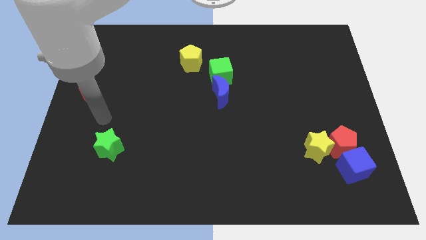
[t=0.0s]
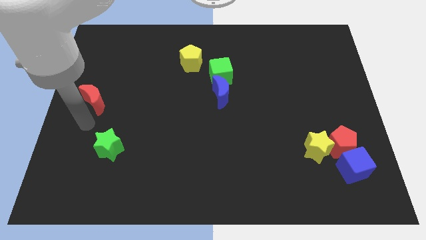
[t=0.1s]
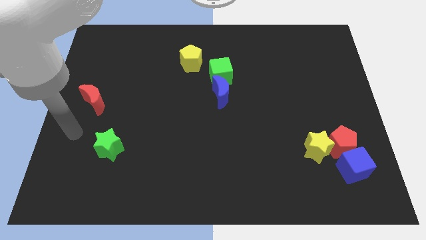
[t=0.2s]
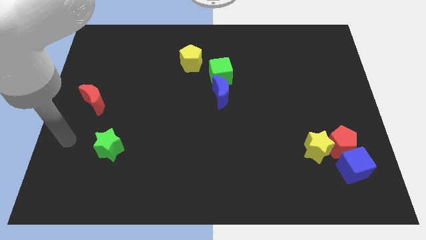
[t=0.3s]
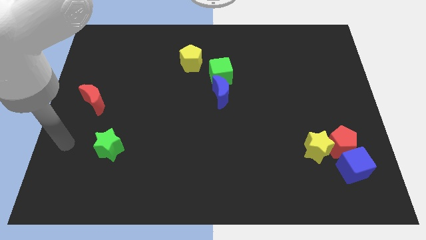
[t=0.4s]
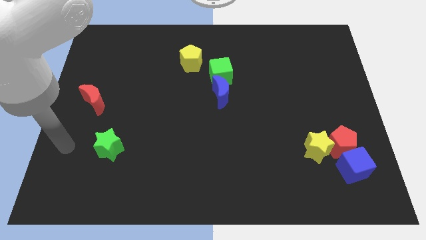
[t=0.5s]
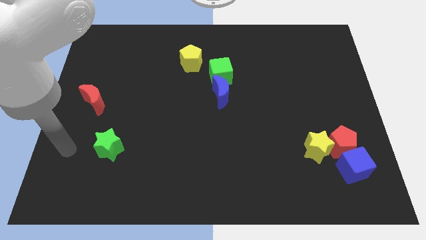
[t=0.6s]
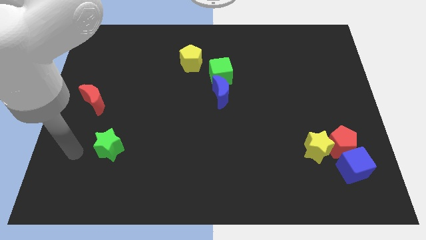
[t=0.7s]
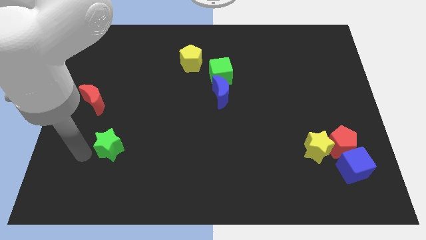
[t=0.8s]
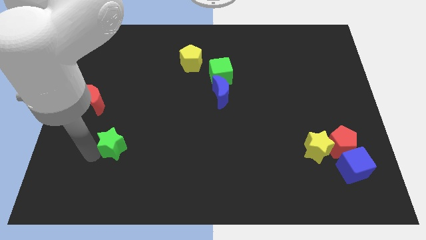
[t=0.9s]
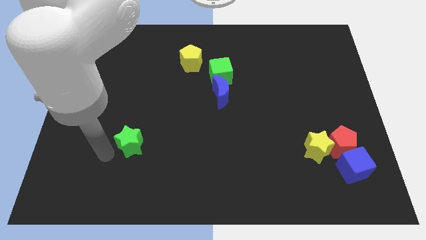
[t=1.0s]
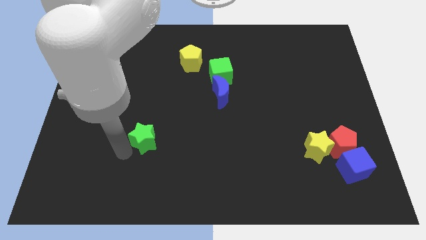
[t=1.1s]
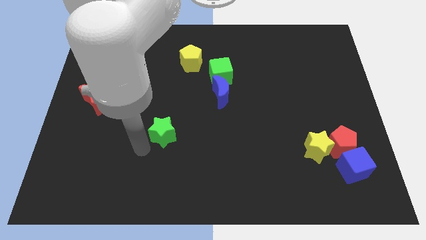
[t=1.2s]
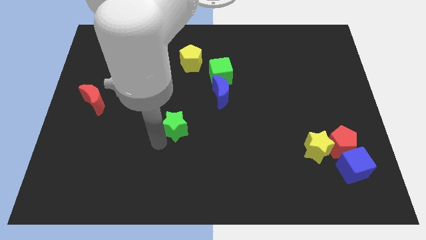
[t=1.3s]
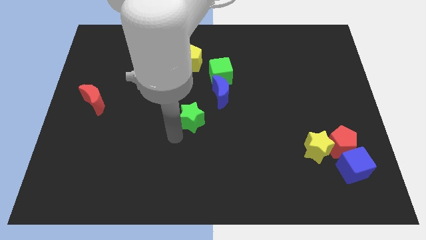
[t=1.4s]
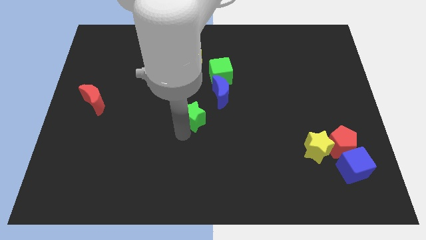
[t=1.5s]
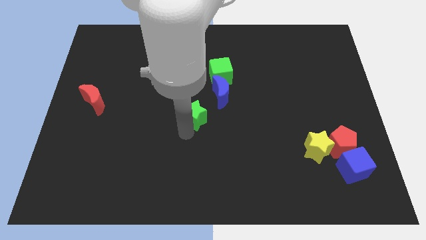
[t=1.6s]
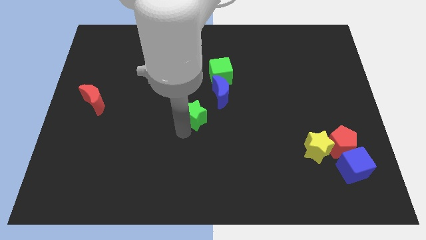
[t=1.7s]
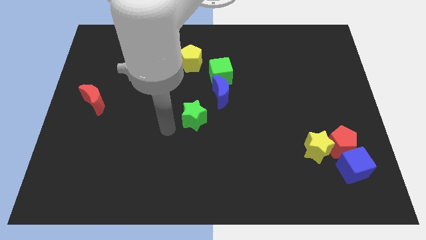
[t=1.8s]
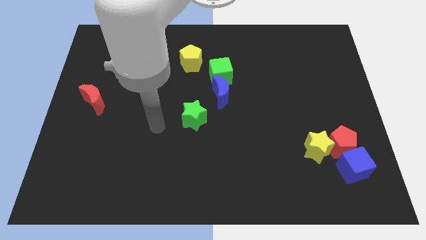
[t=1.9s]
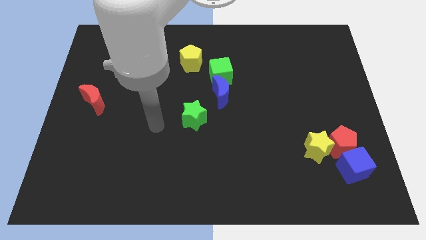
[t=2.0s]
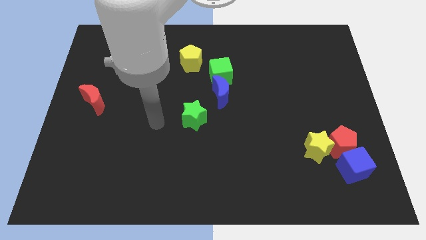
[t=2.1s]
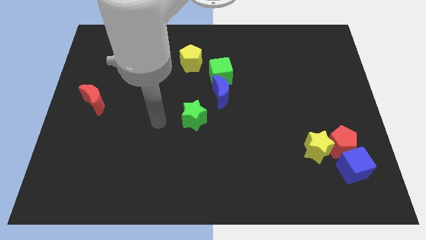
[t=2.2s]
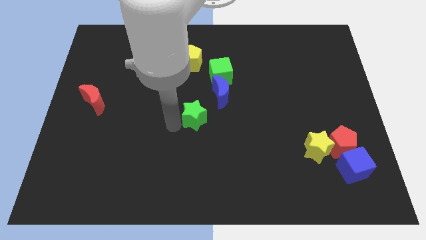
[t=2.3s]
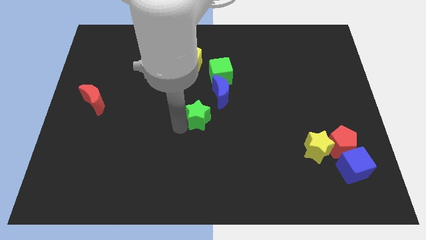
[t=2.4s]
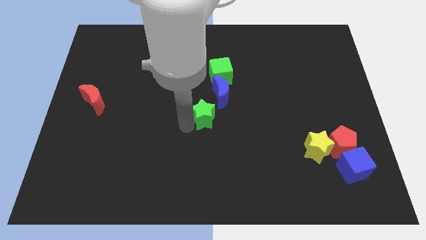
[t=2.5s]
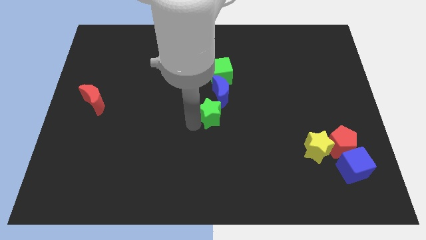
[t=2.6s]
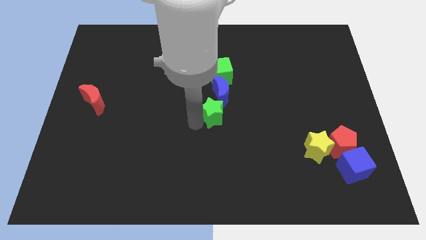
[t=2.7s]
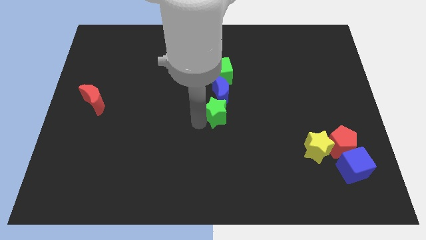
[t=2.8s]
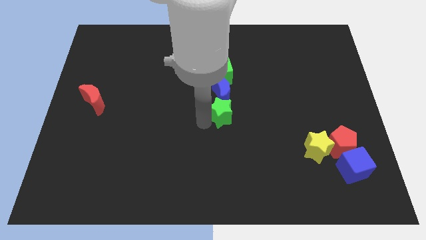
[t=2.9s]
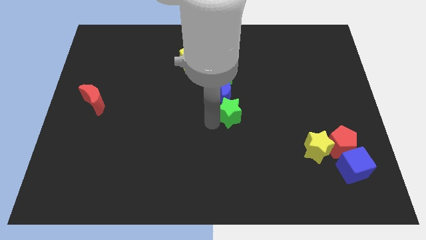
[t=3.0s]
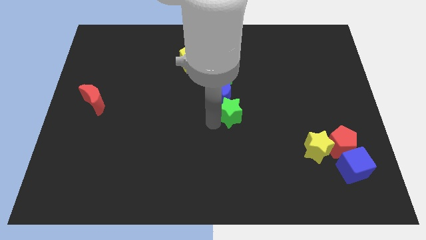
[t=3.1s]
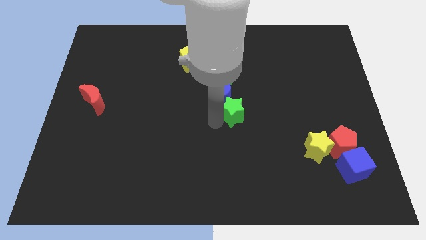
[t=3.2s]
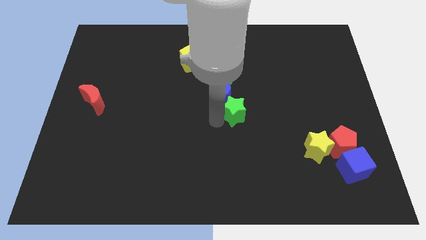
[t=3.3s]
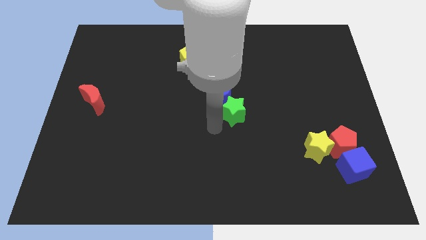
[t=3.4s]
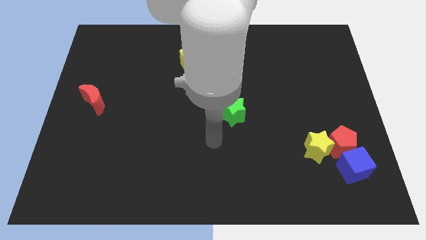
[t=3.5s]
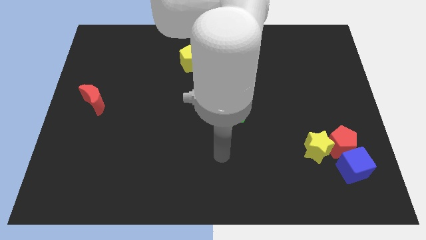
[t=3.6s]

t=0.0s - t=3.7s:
place green star down to the blue crescent

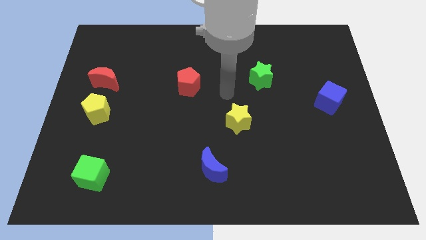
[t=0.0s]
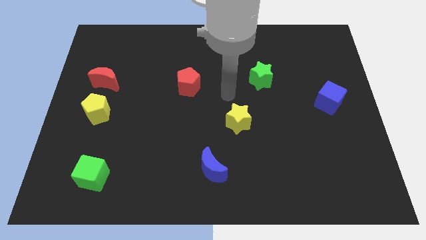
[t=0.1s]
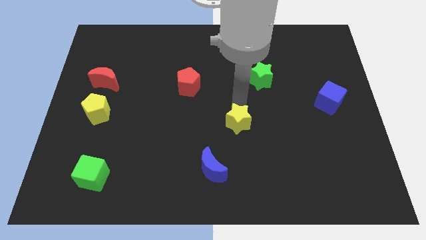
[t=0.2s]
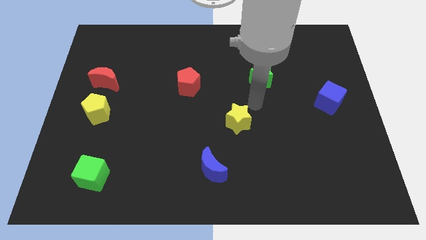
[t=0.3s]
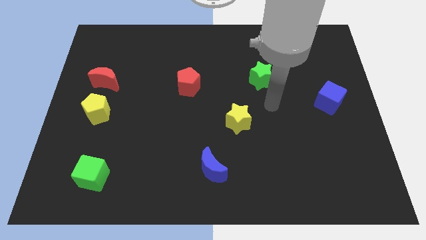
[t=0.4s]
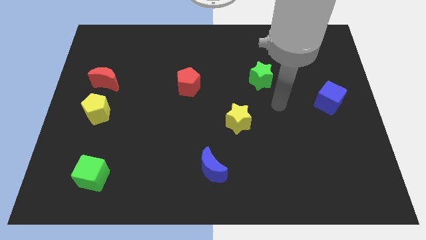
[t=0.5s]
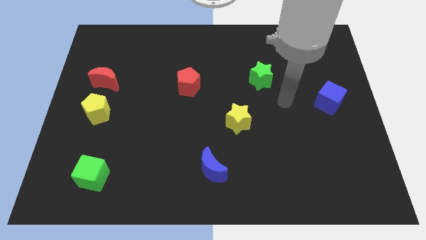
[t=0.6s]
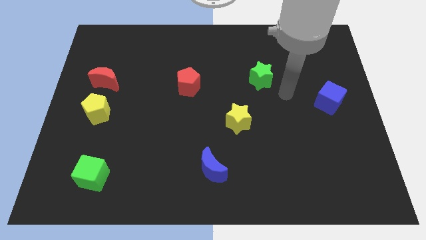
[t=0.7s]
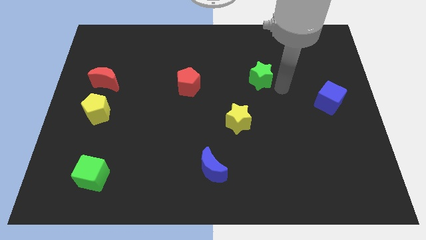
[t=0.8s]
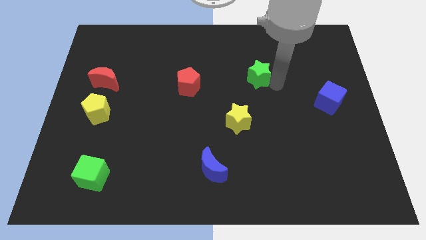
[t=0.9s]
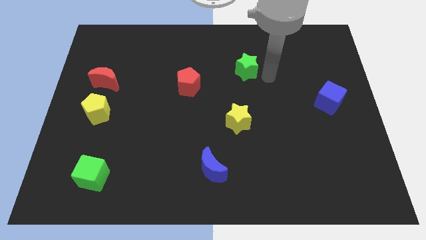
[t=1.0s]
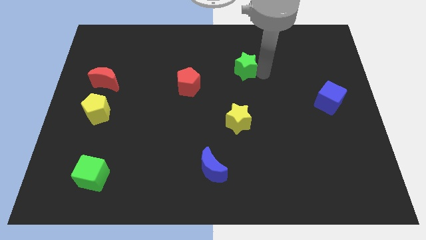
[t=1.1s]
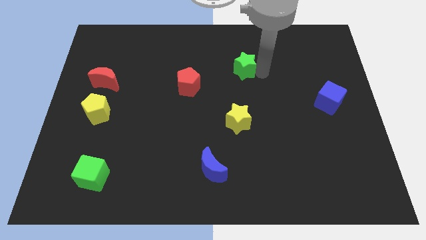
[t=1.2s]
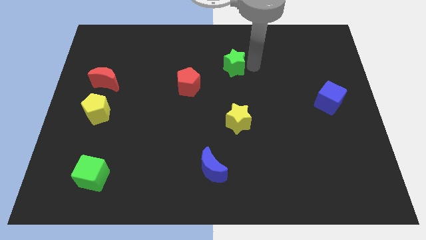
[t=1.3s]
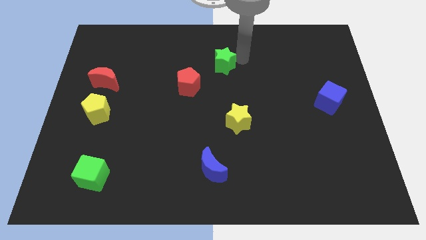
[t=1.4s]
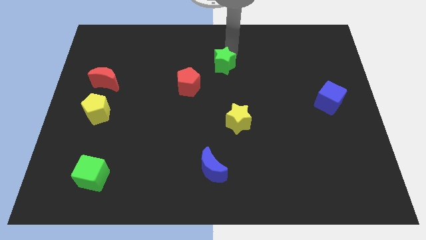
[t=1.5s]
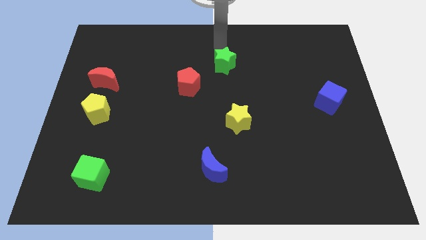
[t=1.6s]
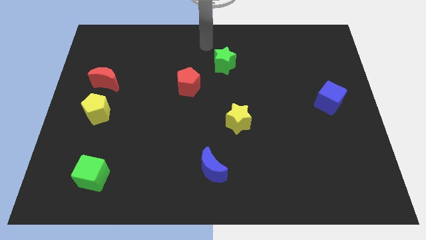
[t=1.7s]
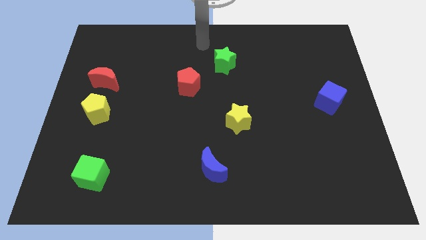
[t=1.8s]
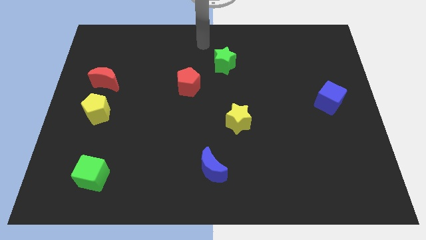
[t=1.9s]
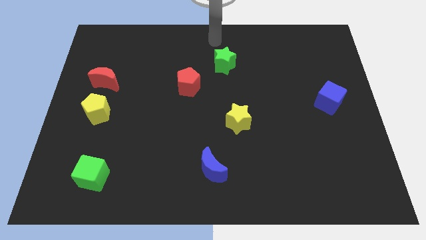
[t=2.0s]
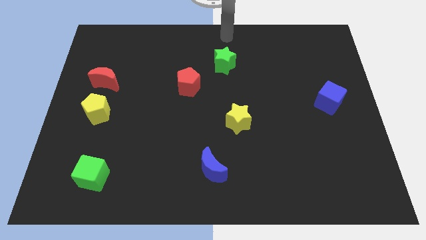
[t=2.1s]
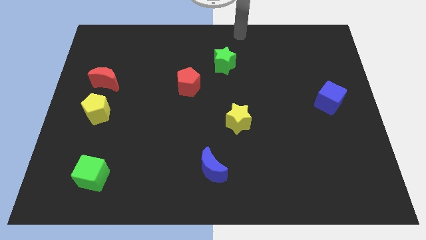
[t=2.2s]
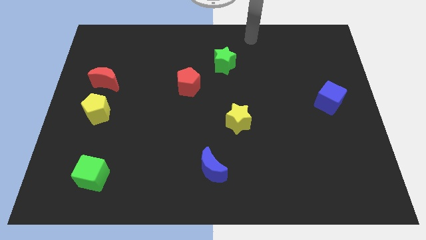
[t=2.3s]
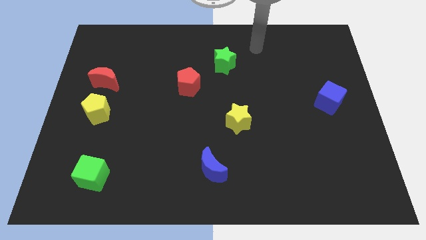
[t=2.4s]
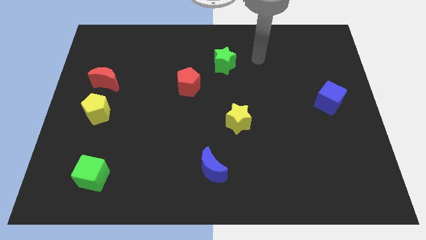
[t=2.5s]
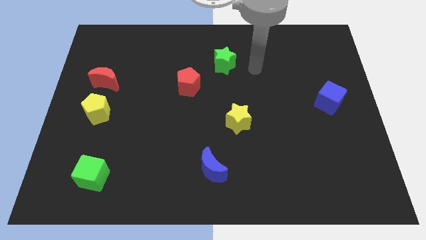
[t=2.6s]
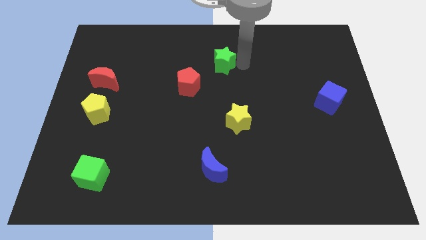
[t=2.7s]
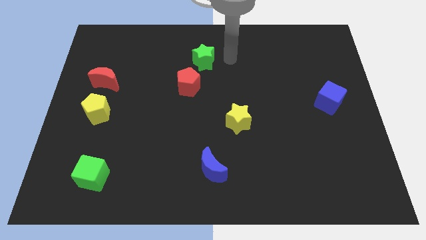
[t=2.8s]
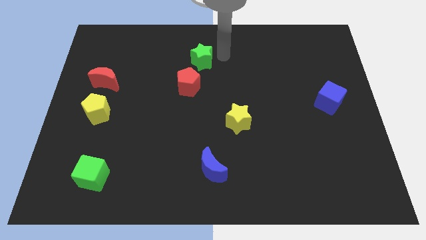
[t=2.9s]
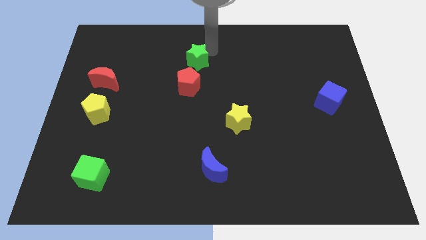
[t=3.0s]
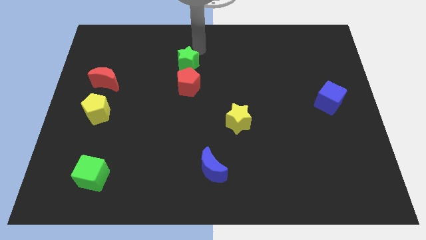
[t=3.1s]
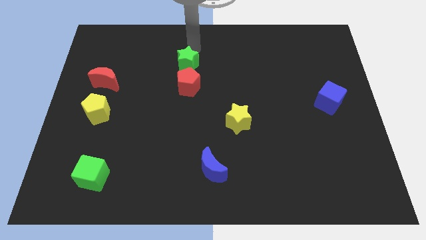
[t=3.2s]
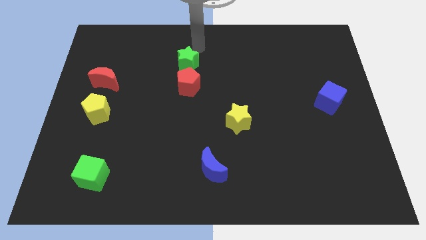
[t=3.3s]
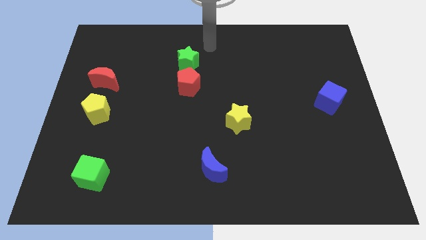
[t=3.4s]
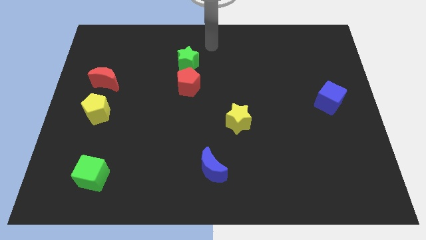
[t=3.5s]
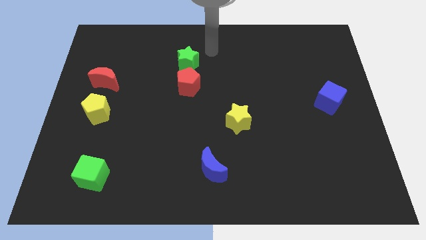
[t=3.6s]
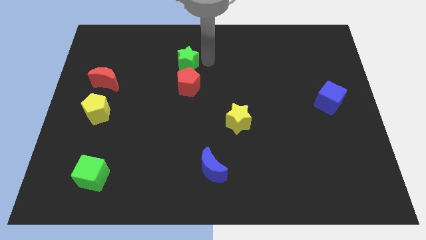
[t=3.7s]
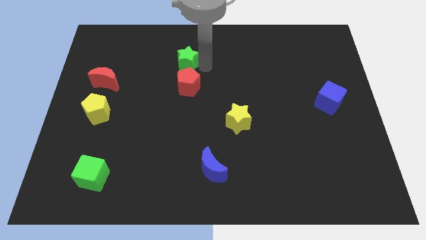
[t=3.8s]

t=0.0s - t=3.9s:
push the green star above the red pentagon

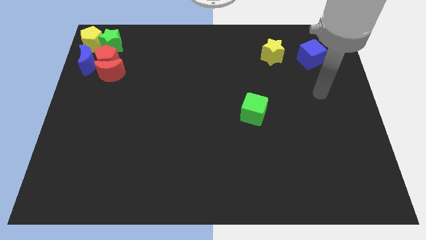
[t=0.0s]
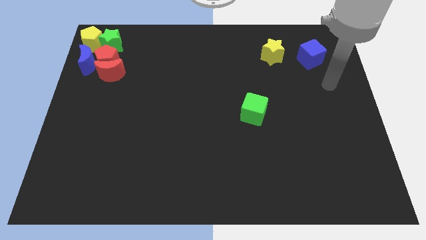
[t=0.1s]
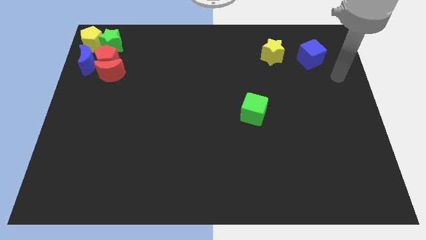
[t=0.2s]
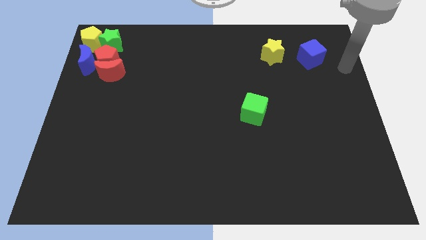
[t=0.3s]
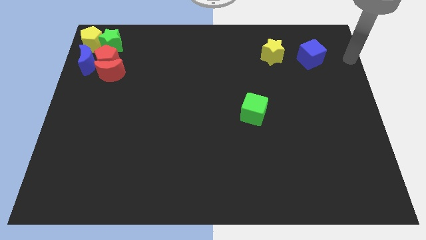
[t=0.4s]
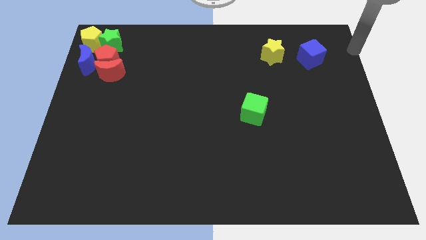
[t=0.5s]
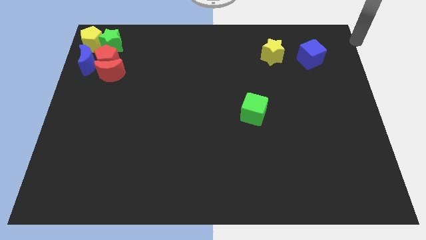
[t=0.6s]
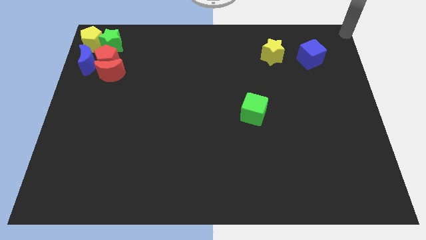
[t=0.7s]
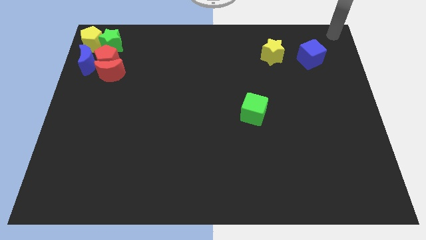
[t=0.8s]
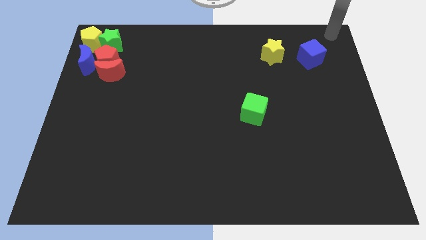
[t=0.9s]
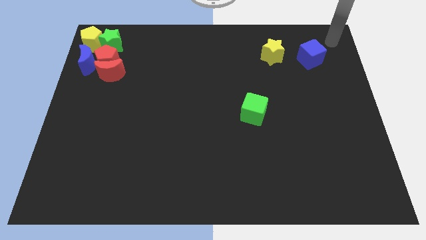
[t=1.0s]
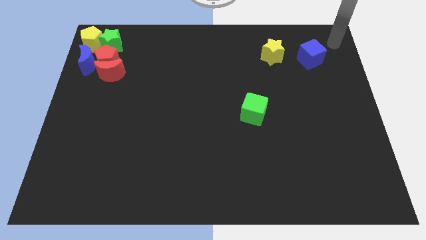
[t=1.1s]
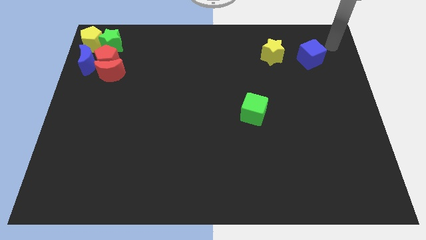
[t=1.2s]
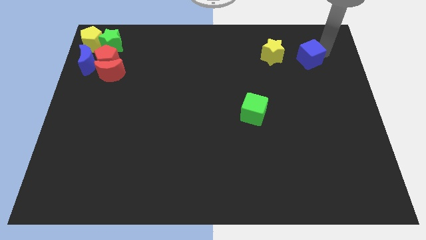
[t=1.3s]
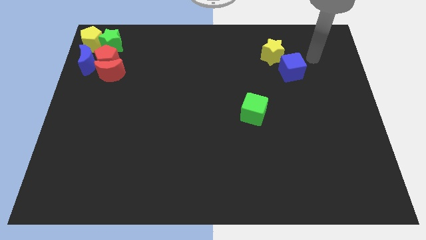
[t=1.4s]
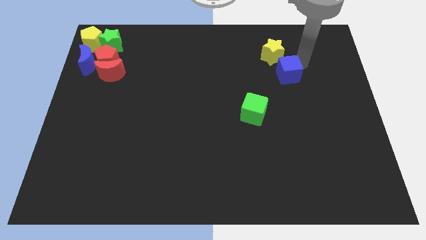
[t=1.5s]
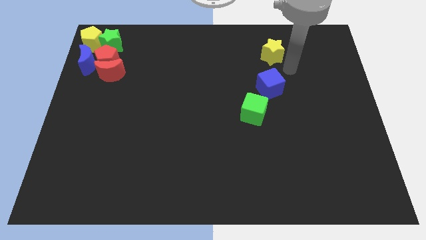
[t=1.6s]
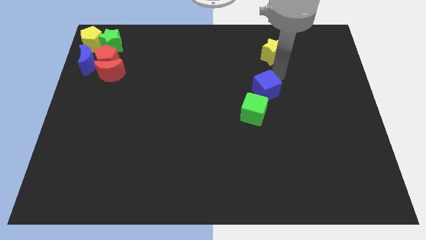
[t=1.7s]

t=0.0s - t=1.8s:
place blue cube in between yellow star and green cube
